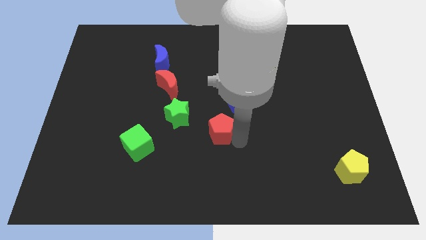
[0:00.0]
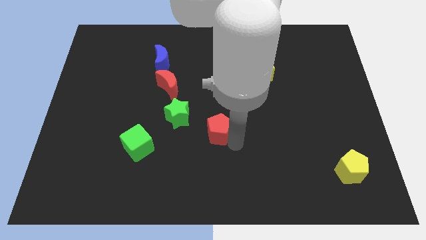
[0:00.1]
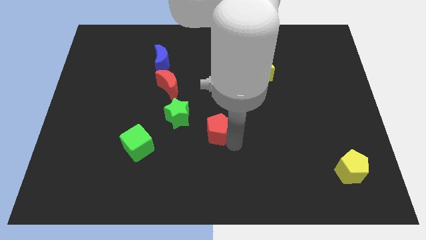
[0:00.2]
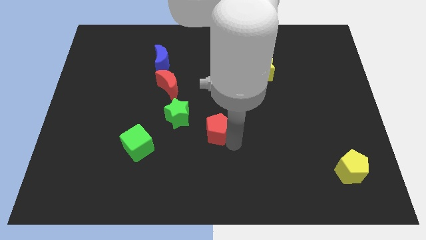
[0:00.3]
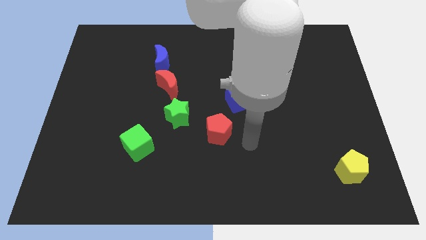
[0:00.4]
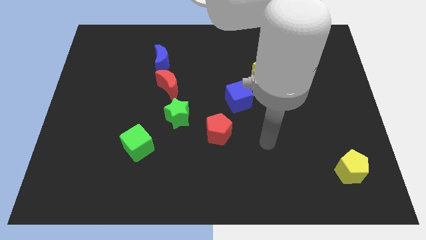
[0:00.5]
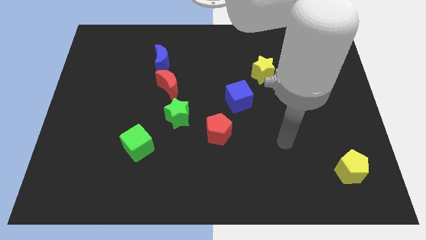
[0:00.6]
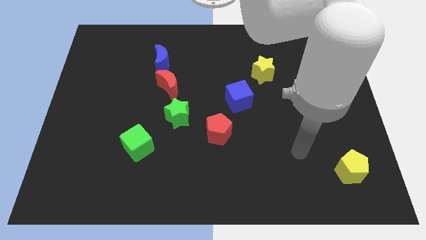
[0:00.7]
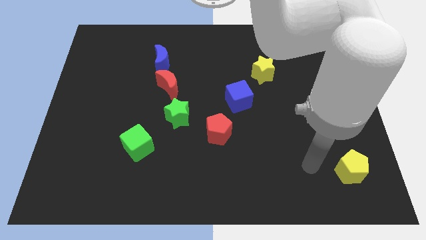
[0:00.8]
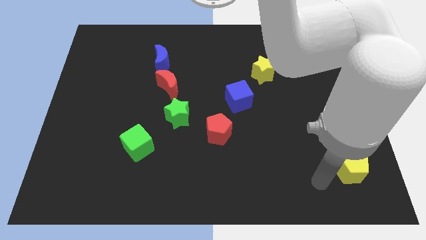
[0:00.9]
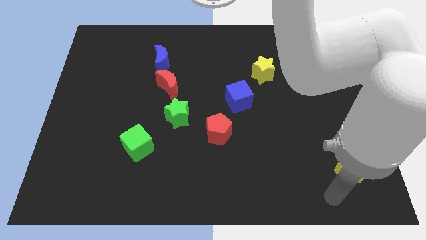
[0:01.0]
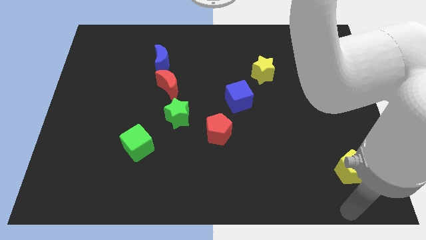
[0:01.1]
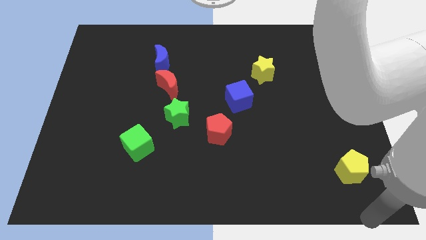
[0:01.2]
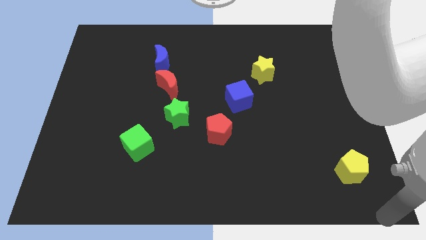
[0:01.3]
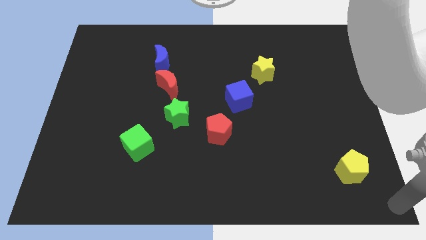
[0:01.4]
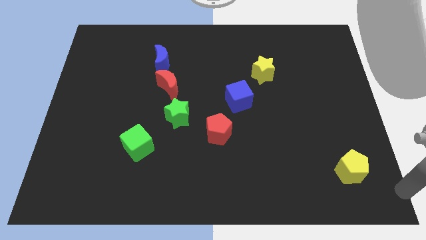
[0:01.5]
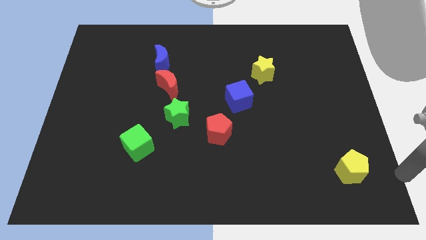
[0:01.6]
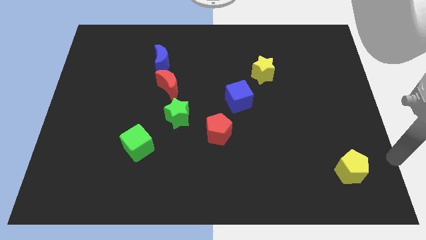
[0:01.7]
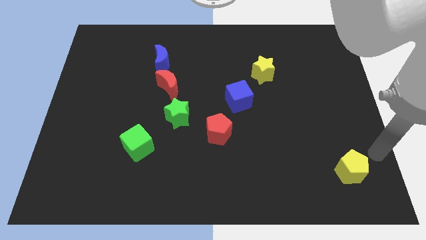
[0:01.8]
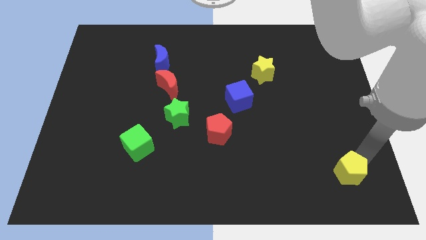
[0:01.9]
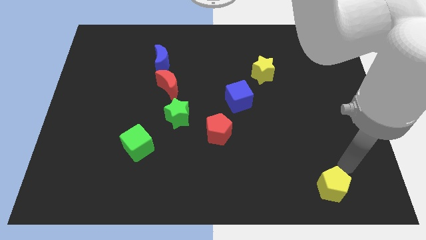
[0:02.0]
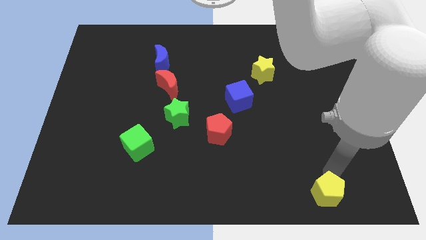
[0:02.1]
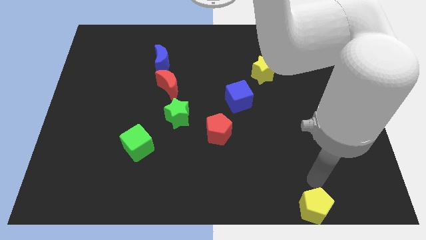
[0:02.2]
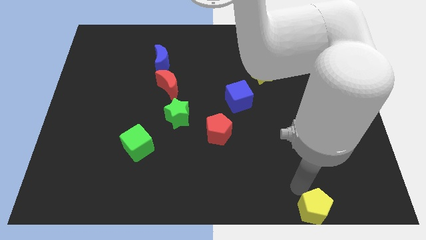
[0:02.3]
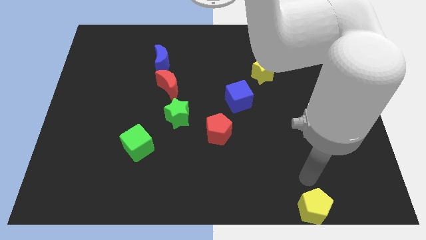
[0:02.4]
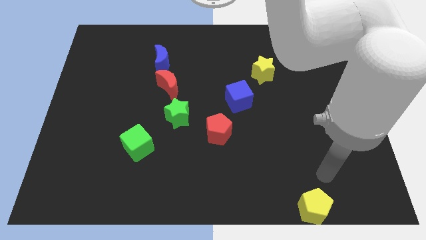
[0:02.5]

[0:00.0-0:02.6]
place the yellow pentagon diagonally bottom right to the red pentagon

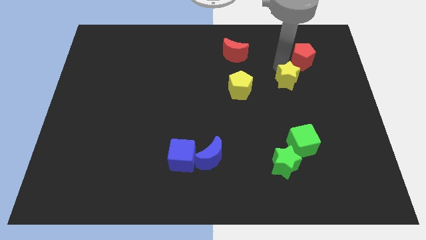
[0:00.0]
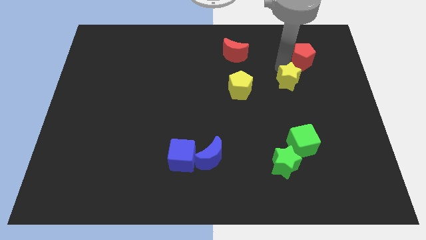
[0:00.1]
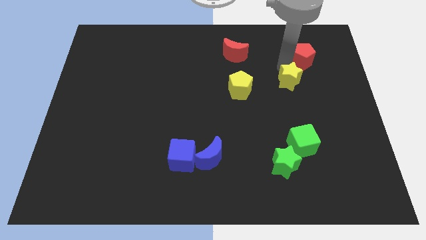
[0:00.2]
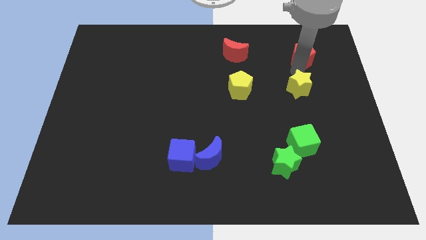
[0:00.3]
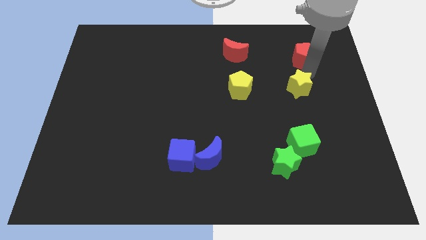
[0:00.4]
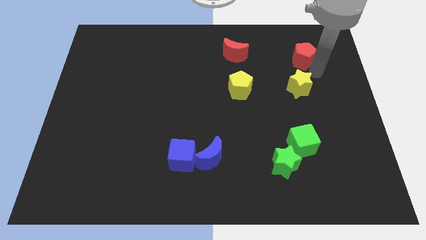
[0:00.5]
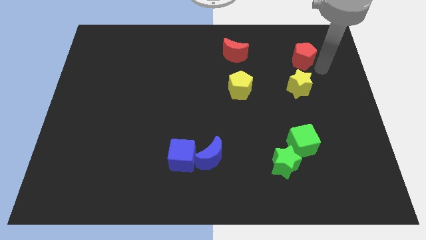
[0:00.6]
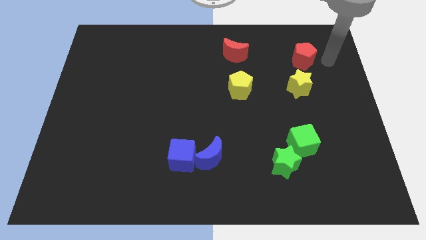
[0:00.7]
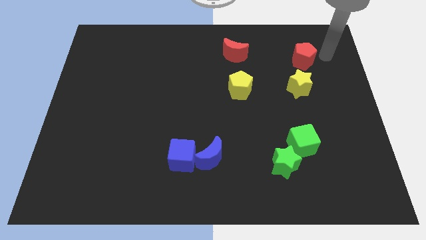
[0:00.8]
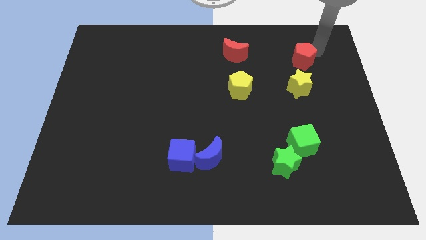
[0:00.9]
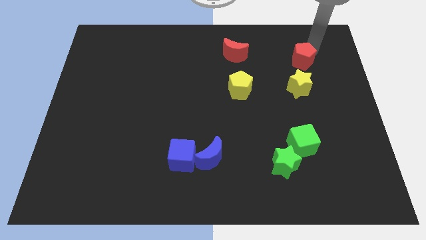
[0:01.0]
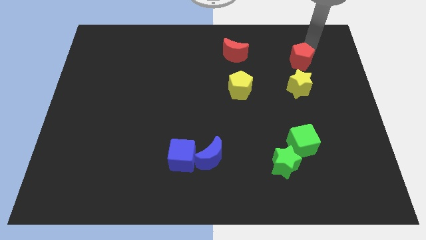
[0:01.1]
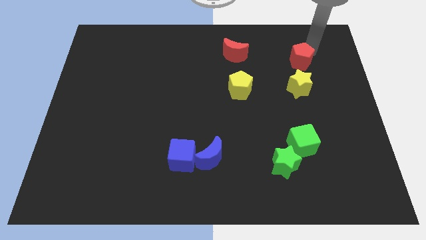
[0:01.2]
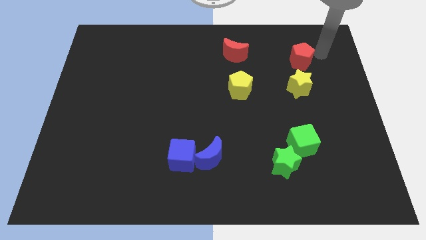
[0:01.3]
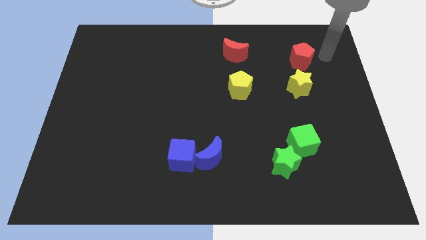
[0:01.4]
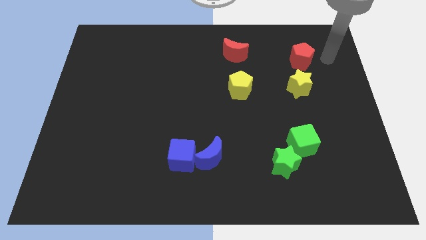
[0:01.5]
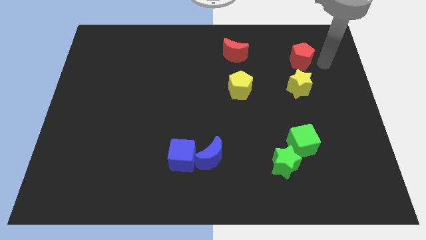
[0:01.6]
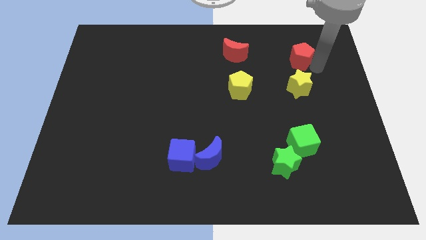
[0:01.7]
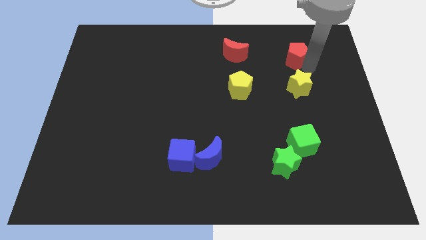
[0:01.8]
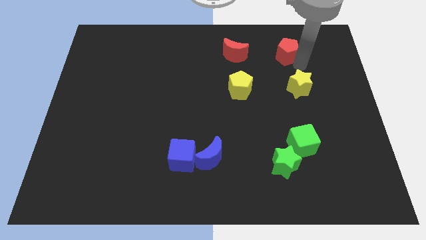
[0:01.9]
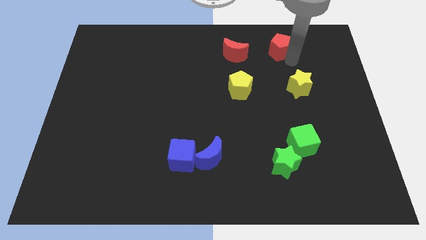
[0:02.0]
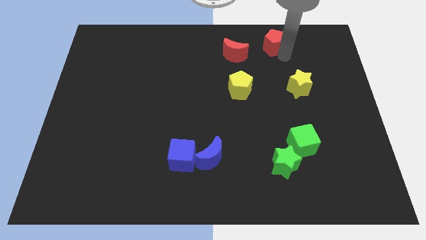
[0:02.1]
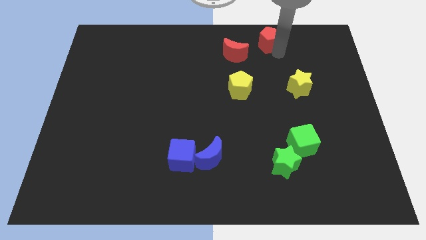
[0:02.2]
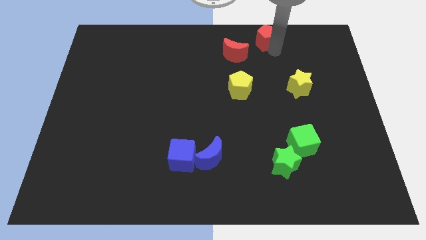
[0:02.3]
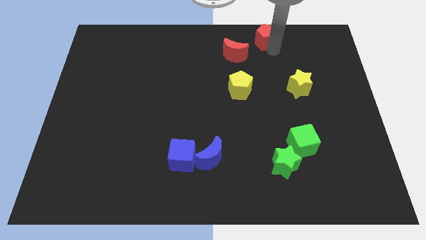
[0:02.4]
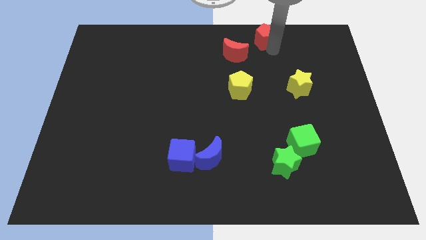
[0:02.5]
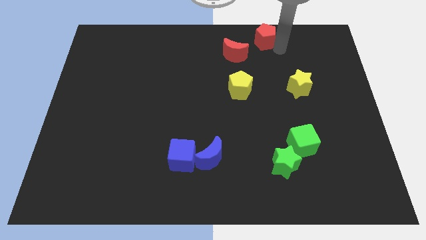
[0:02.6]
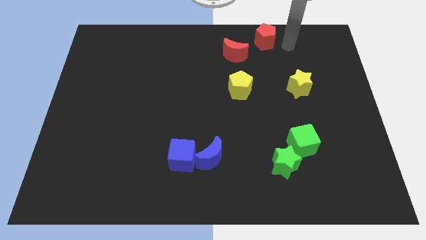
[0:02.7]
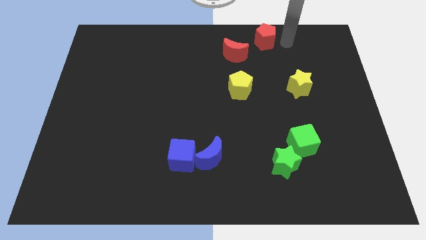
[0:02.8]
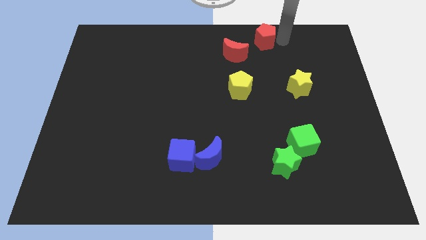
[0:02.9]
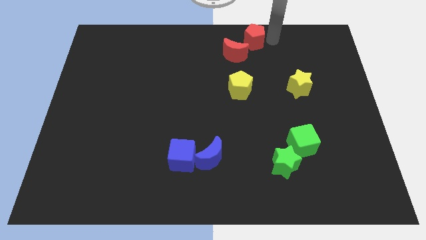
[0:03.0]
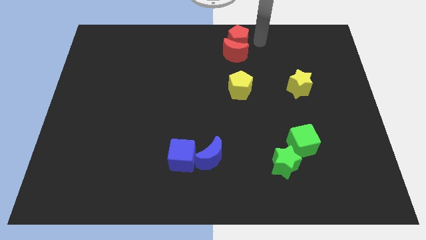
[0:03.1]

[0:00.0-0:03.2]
place the red pentagon above the red moon

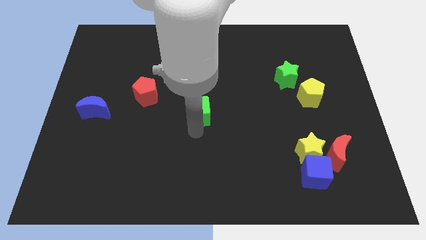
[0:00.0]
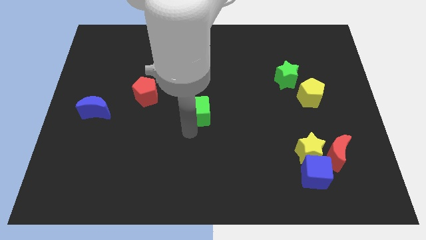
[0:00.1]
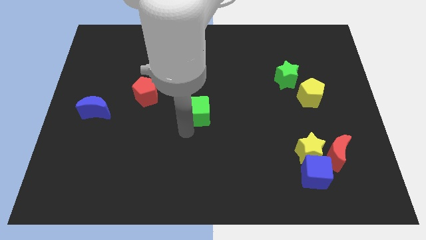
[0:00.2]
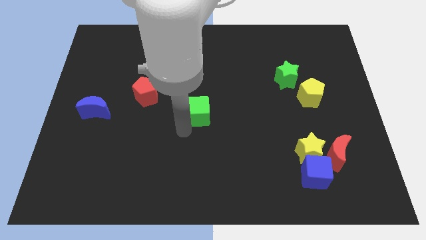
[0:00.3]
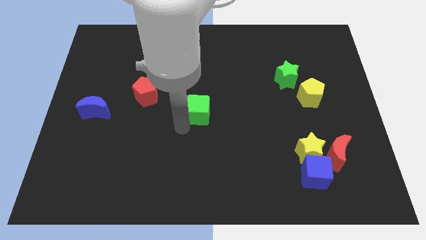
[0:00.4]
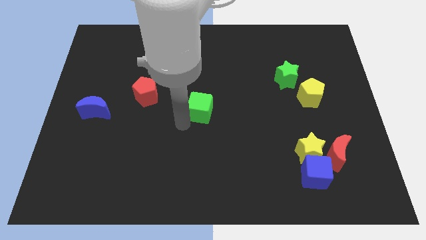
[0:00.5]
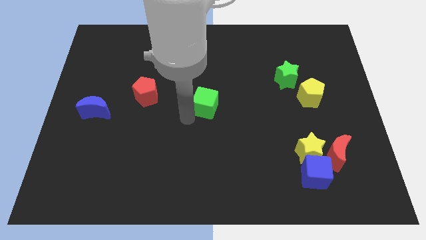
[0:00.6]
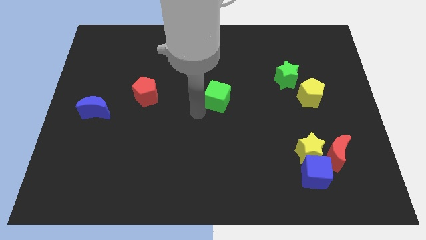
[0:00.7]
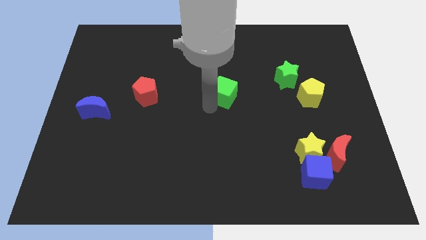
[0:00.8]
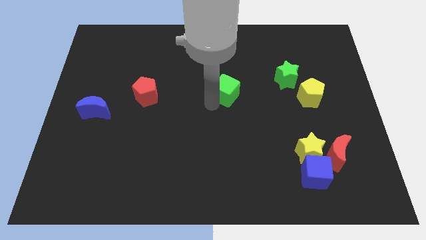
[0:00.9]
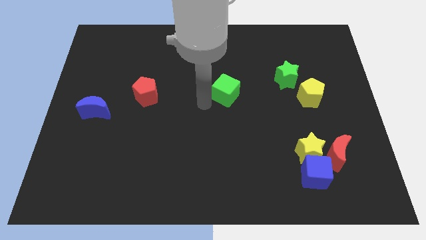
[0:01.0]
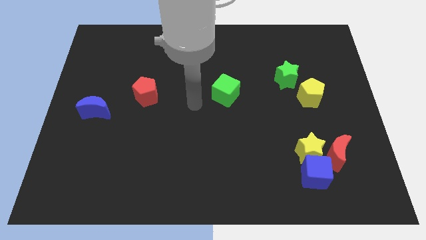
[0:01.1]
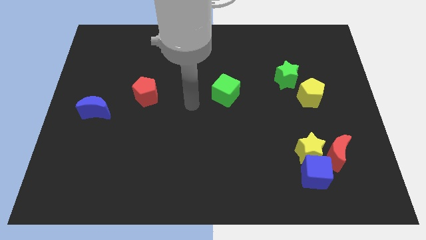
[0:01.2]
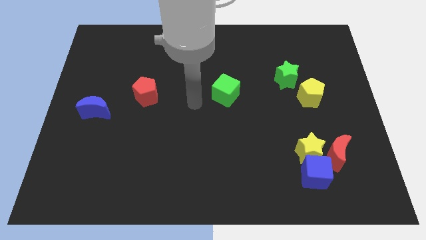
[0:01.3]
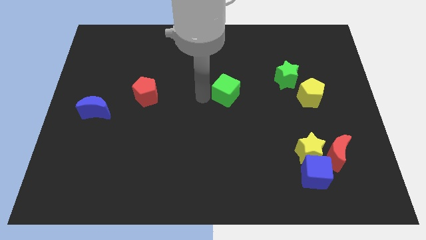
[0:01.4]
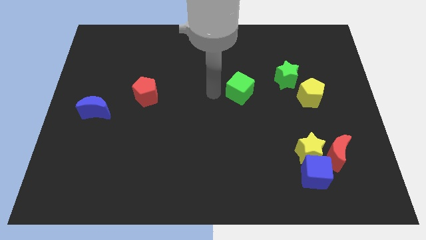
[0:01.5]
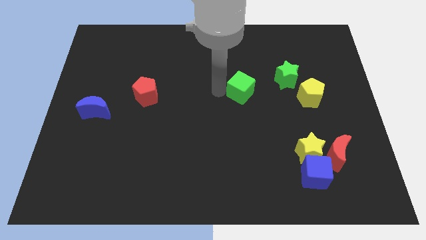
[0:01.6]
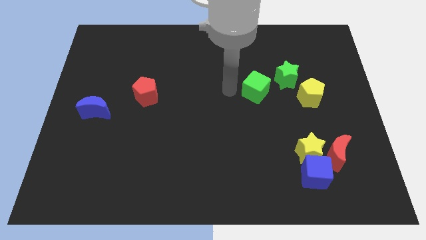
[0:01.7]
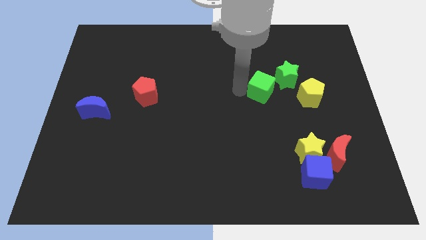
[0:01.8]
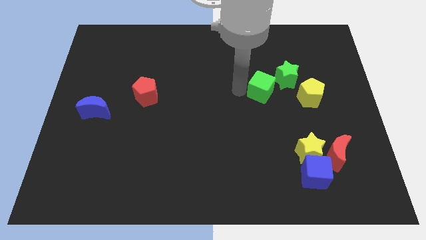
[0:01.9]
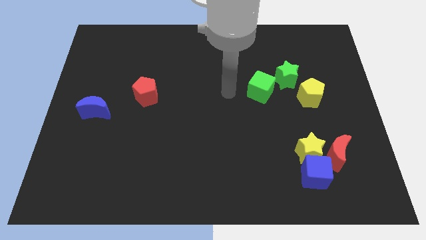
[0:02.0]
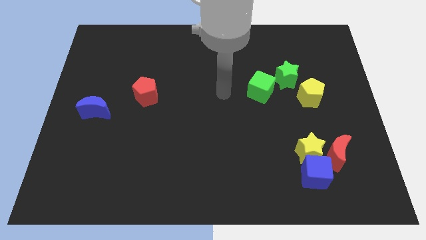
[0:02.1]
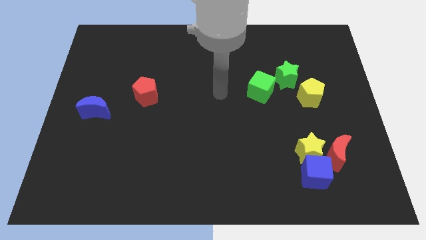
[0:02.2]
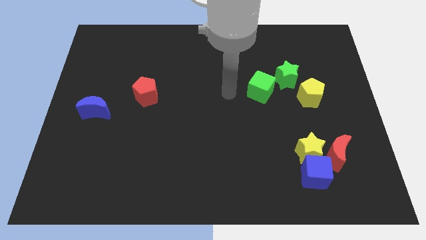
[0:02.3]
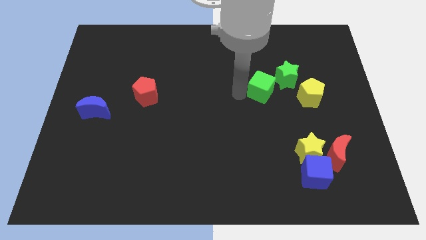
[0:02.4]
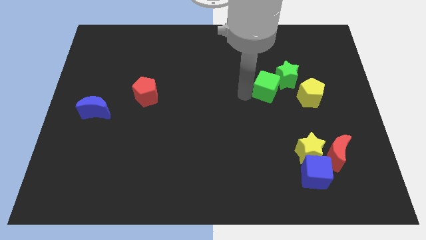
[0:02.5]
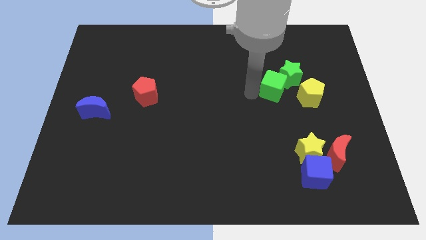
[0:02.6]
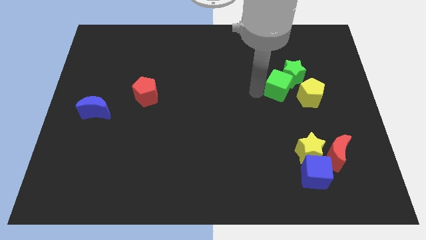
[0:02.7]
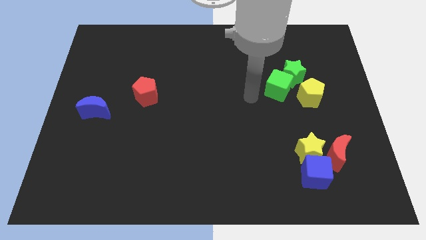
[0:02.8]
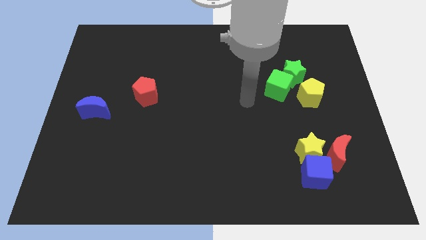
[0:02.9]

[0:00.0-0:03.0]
push the green cube into green star
